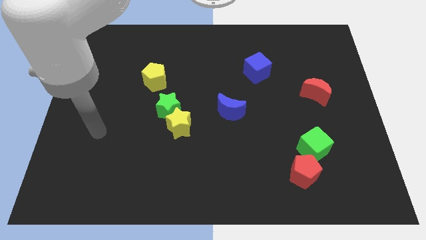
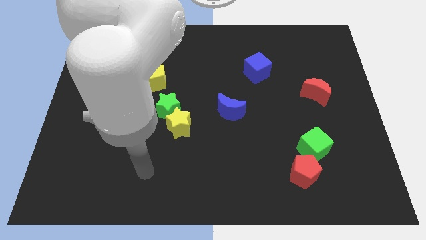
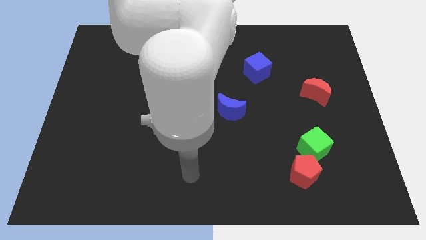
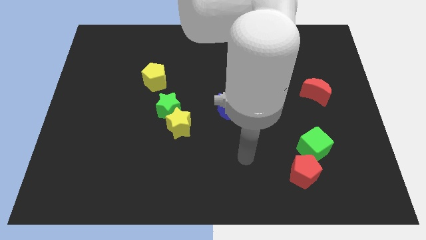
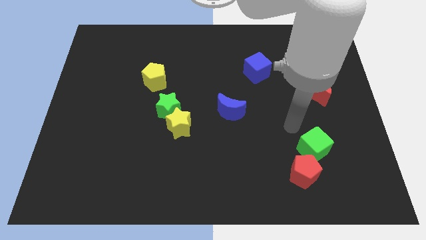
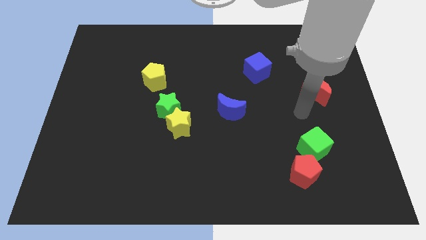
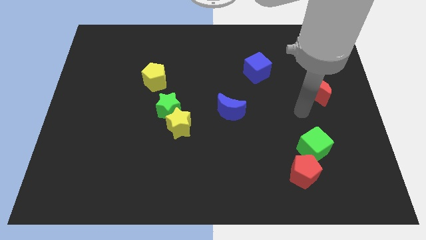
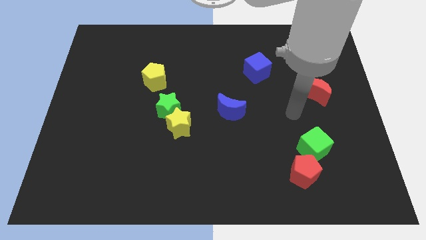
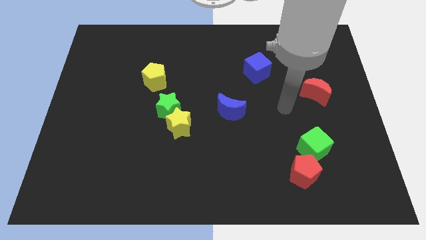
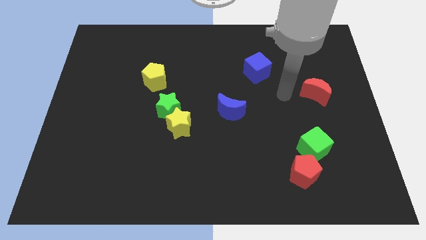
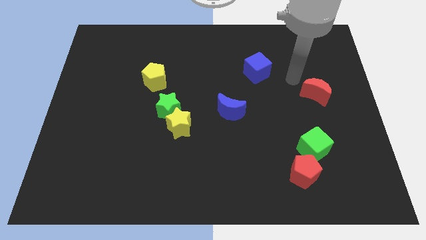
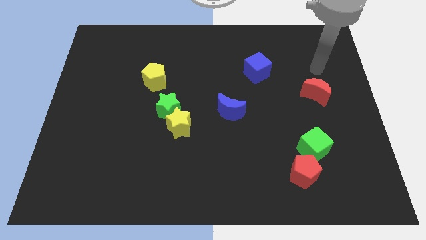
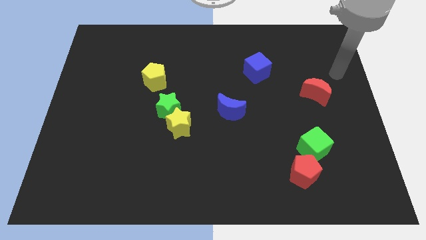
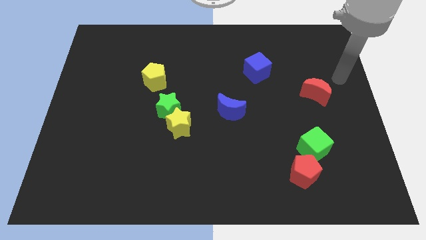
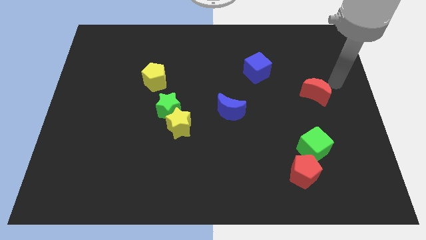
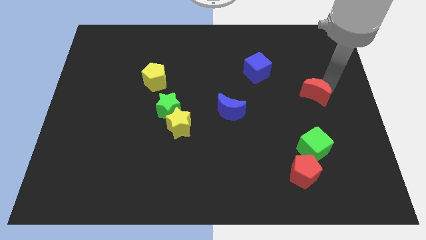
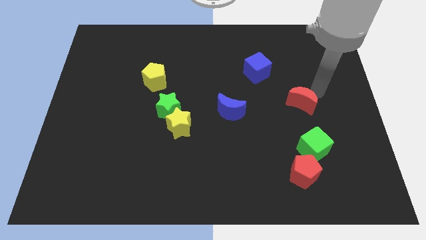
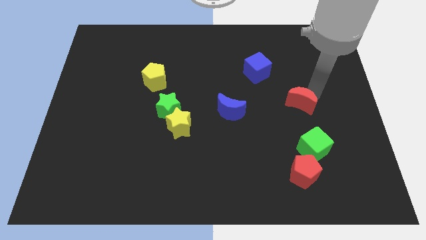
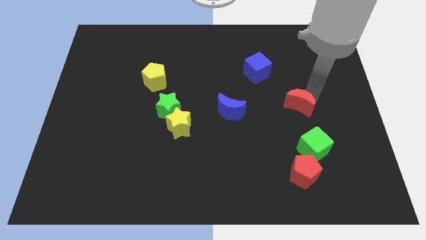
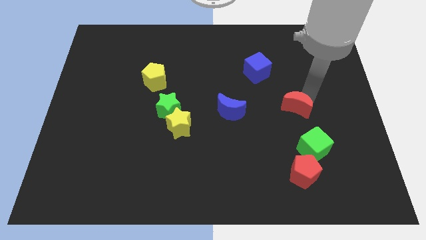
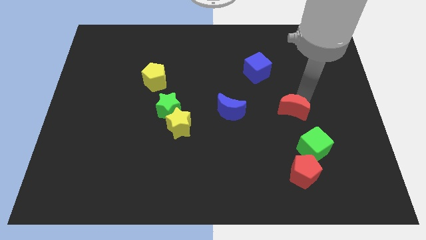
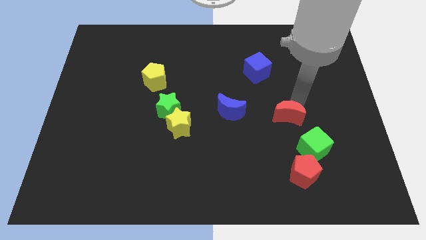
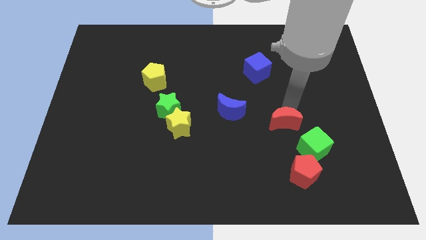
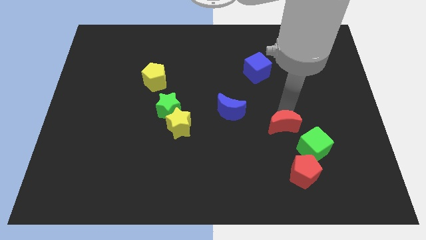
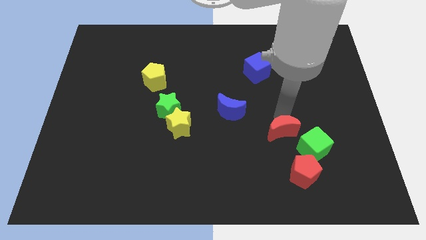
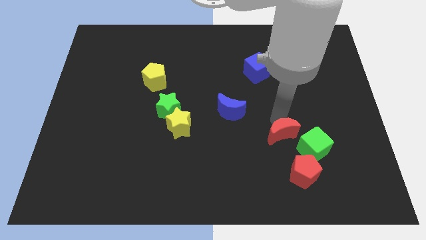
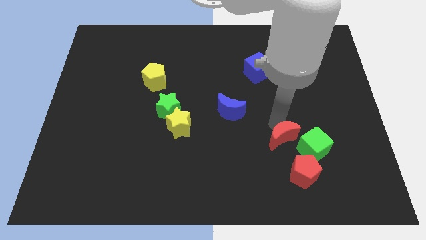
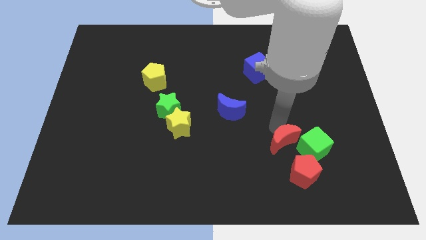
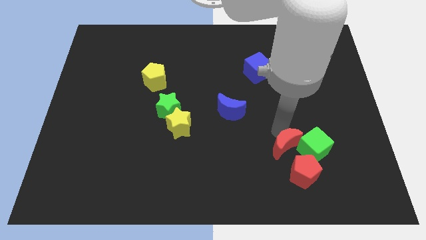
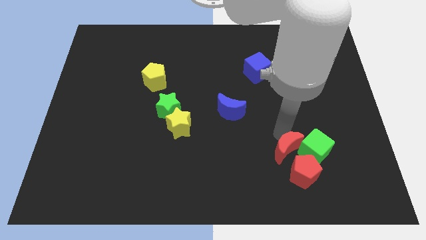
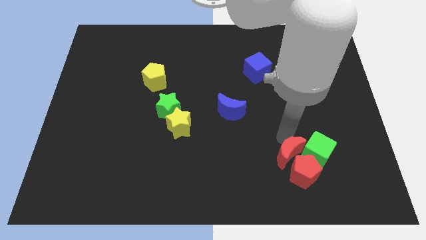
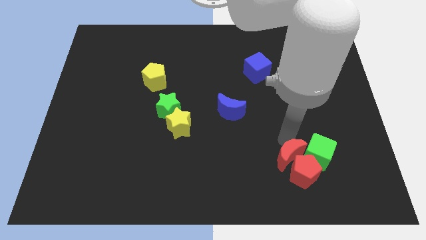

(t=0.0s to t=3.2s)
slide the red moon close to the red pentagon

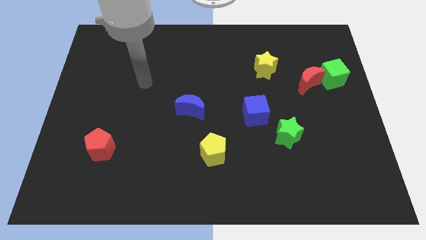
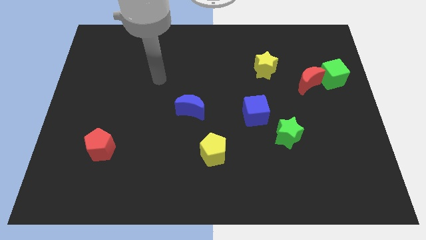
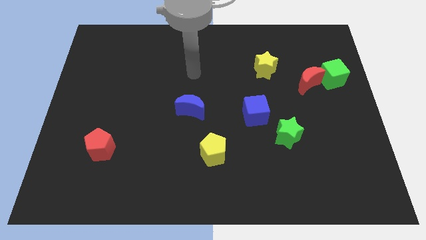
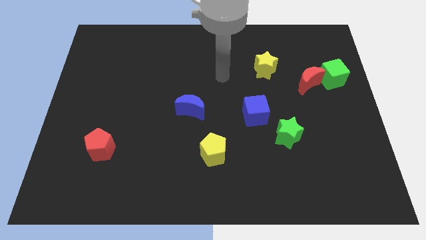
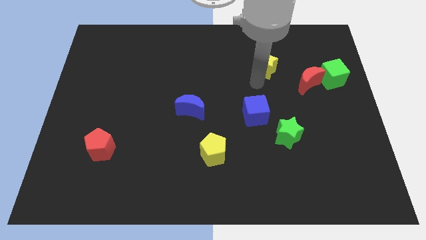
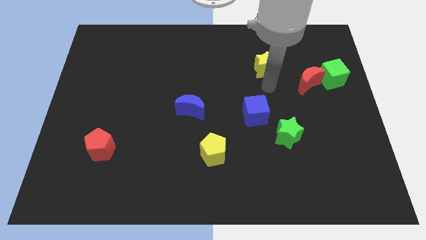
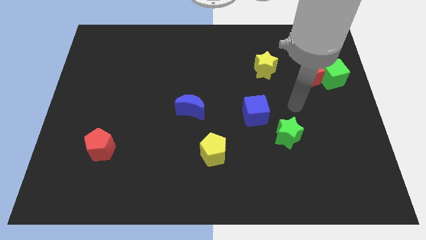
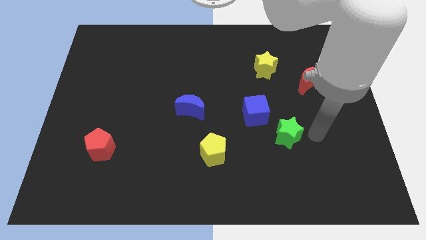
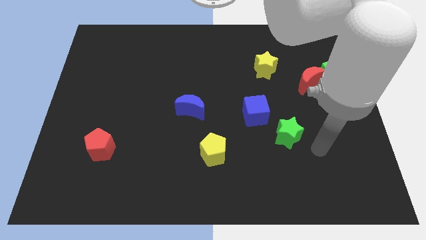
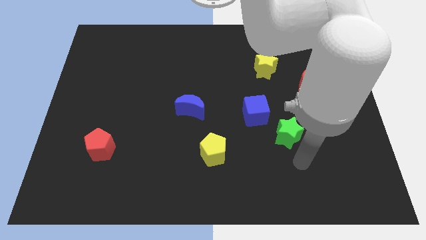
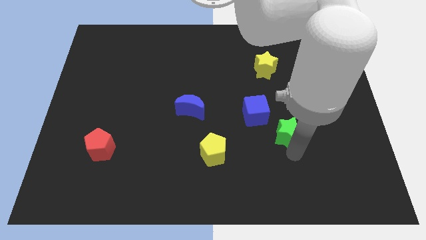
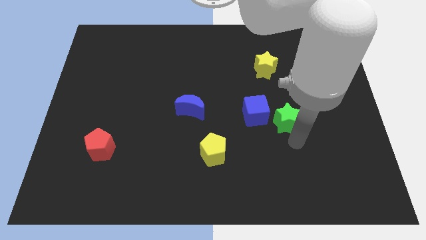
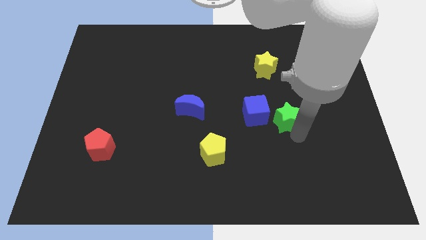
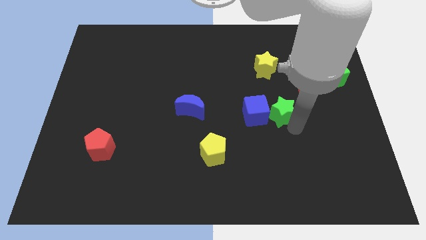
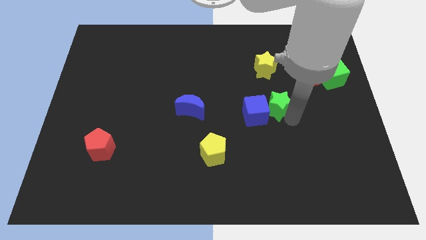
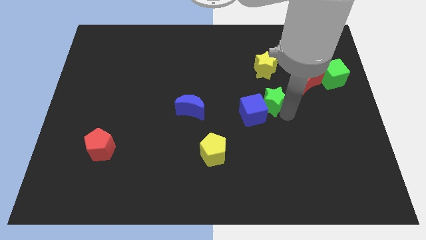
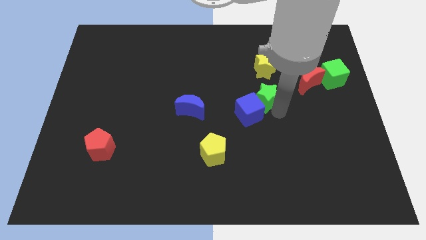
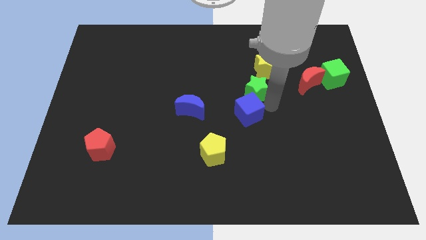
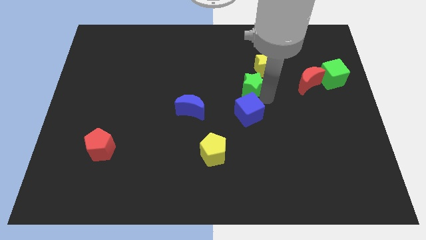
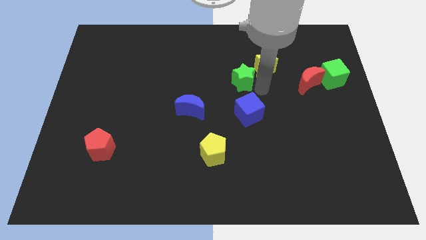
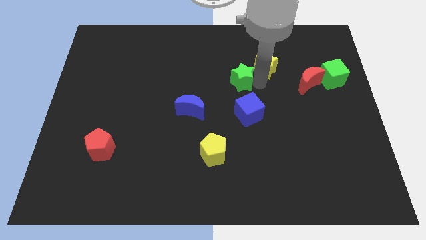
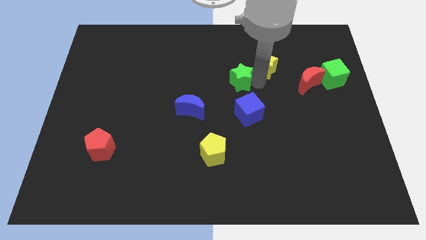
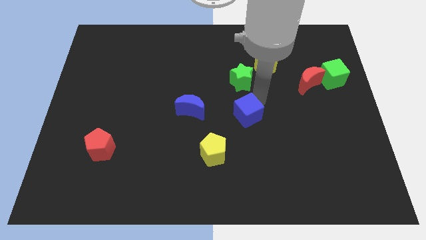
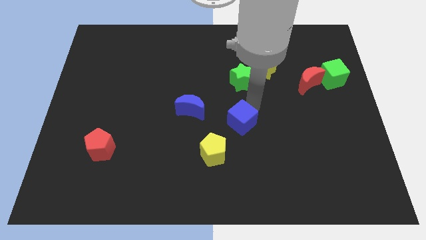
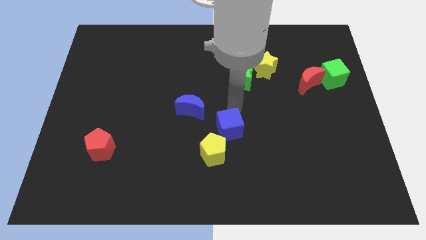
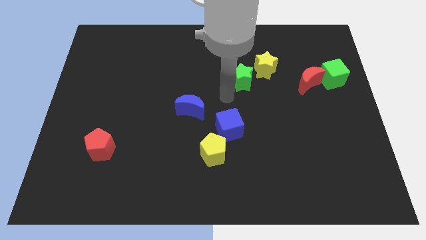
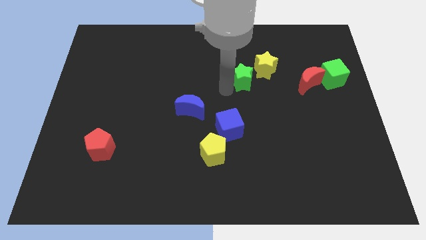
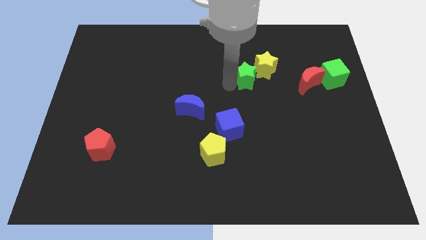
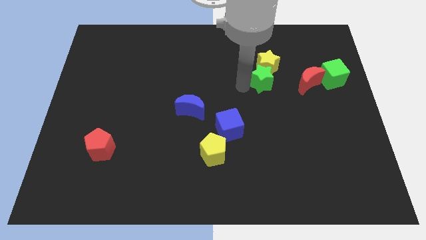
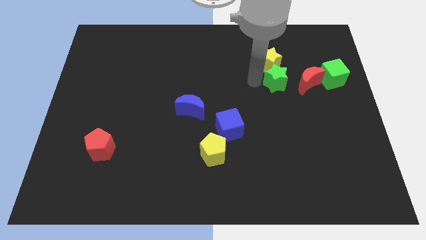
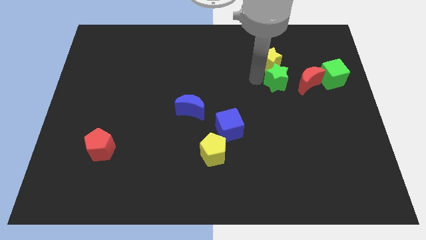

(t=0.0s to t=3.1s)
push the green star to the yellow star

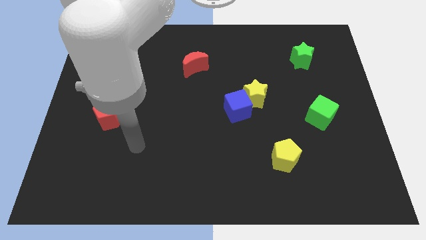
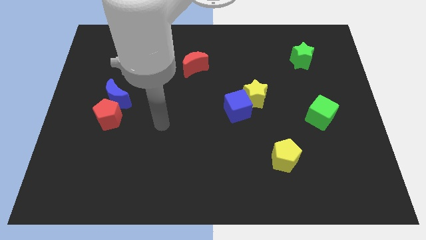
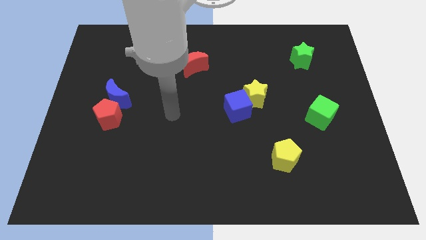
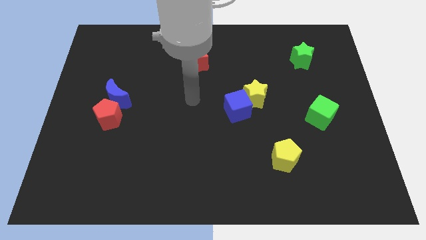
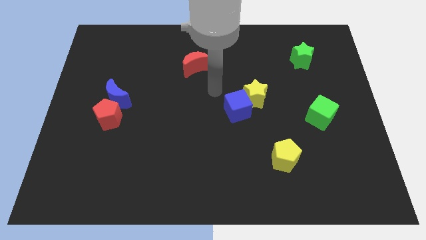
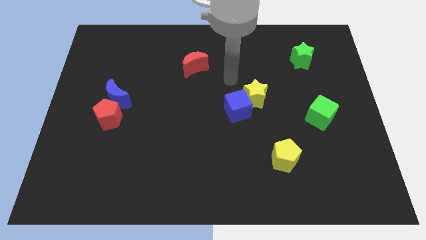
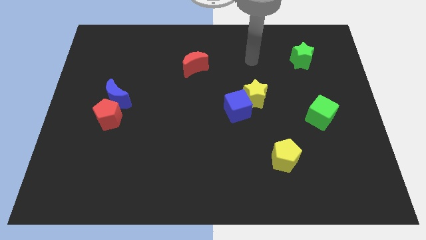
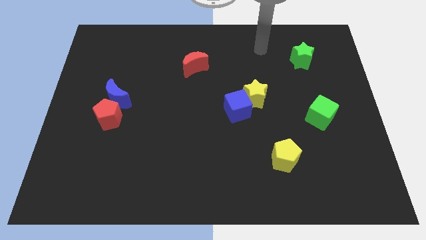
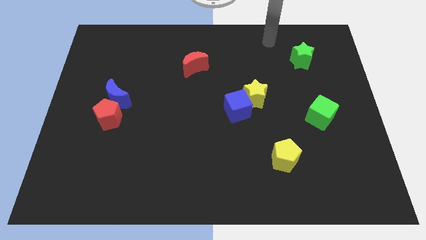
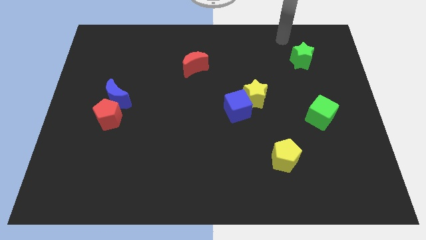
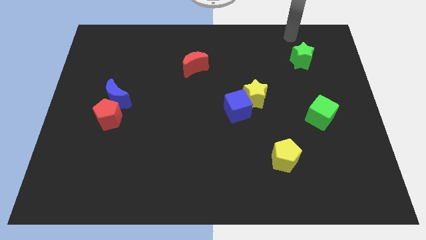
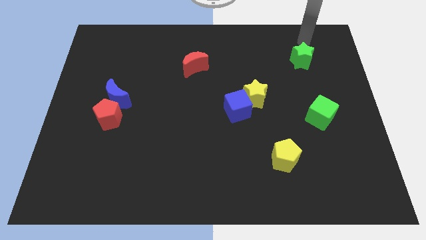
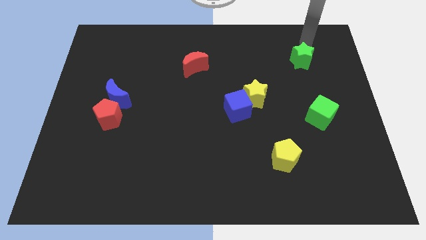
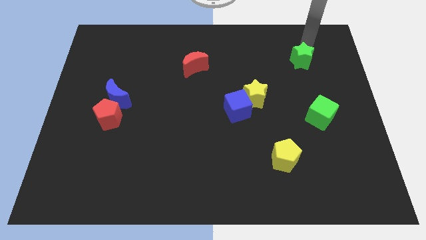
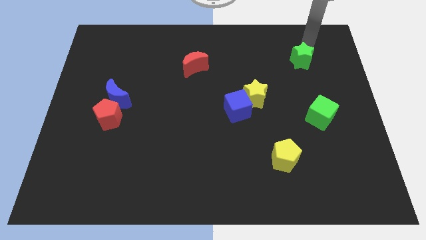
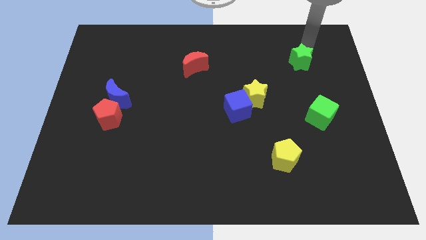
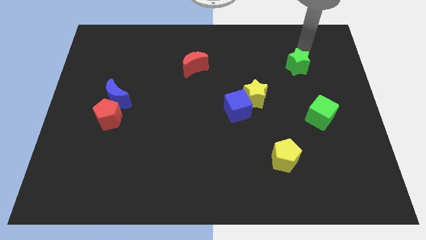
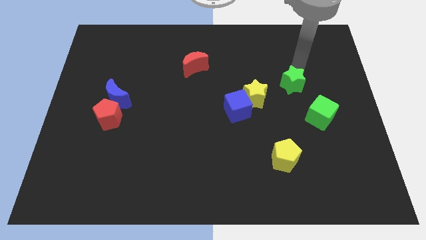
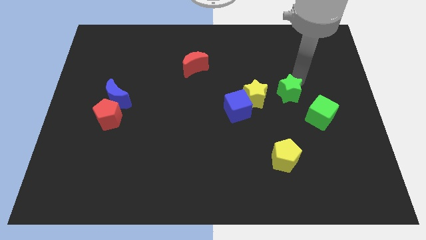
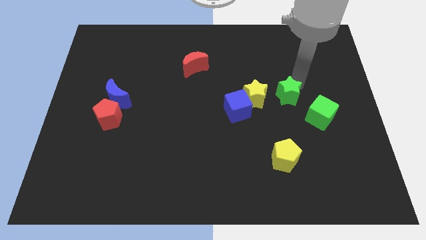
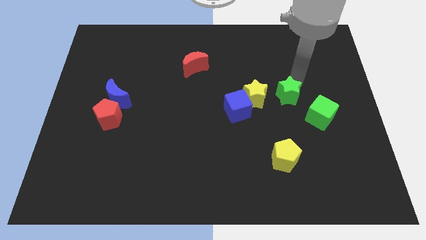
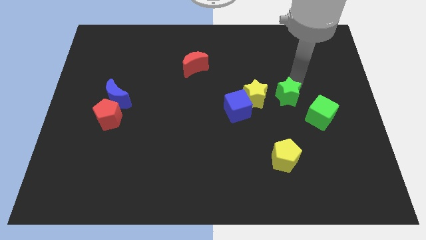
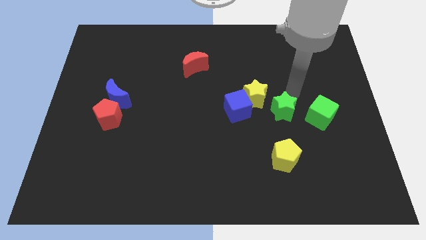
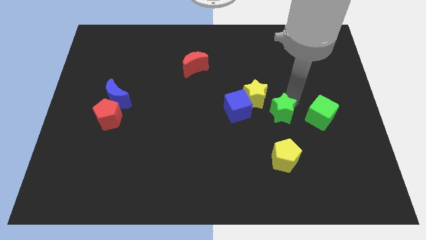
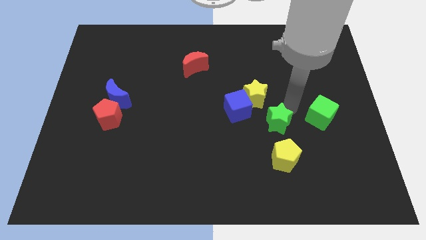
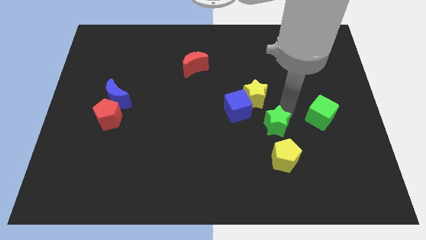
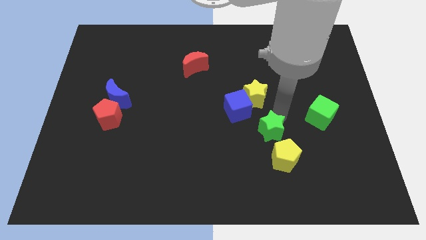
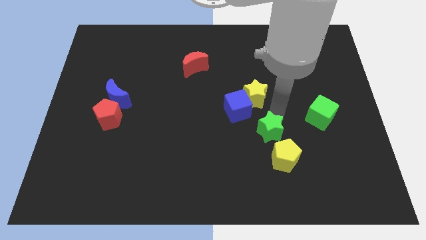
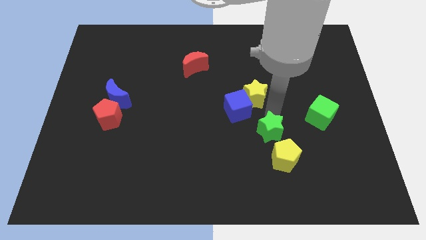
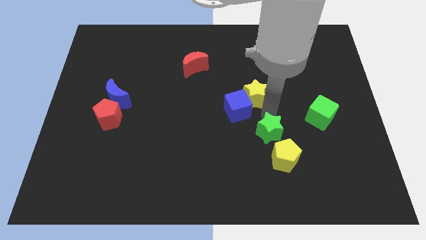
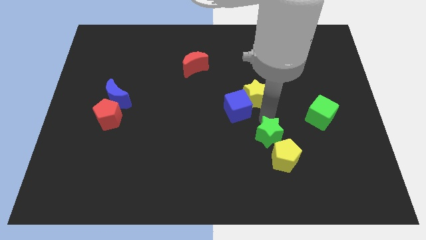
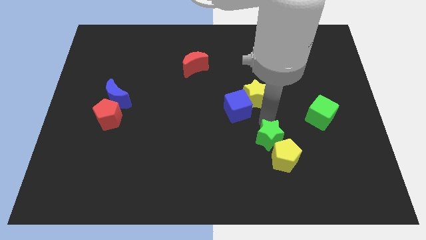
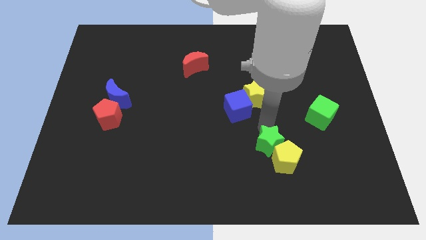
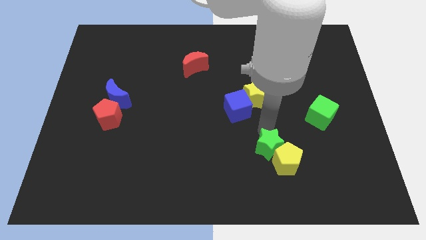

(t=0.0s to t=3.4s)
move the green star next to the yellow pentagon
